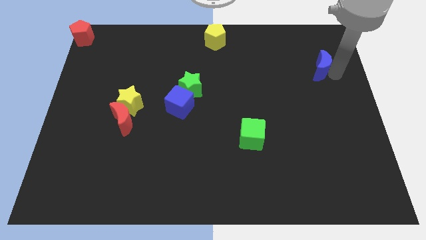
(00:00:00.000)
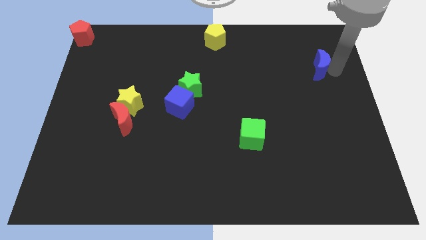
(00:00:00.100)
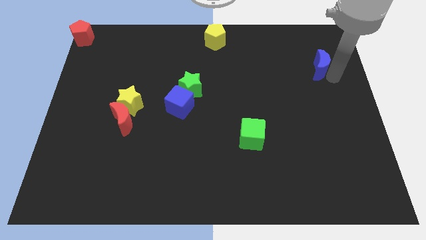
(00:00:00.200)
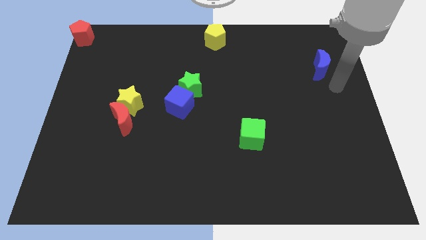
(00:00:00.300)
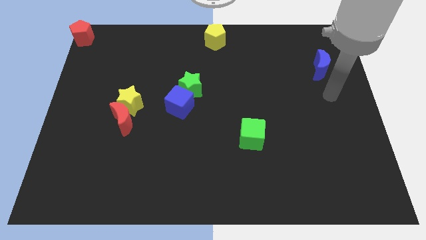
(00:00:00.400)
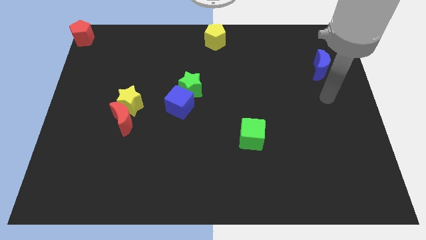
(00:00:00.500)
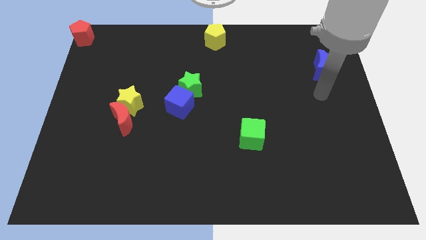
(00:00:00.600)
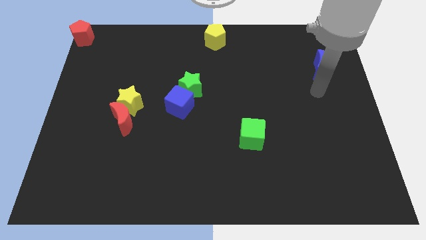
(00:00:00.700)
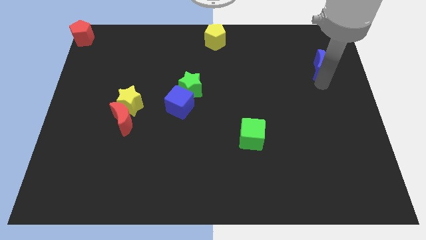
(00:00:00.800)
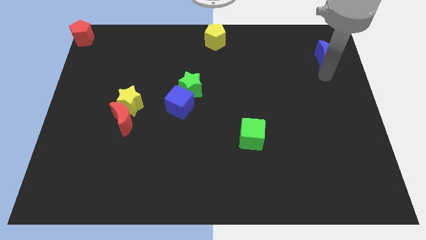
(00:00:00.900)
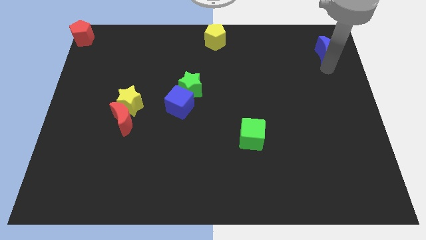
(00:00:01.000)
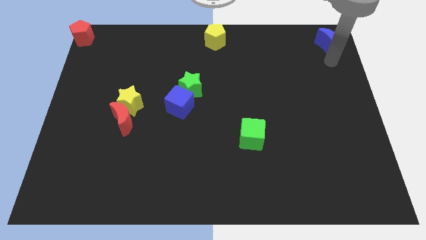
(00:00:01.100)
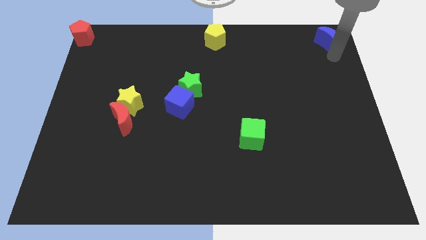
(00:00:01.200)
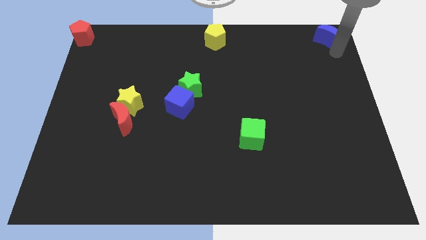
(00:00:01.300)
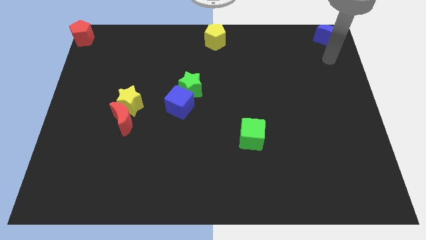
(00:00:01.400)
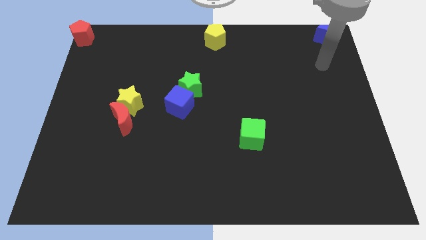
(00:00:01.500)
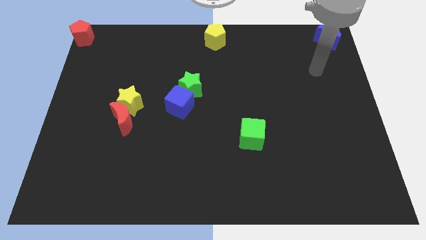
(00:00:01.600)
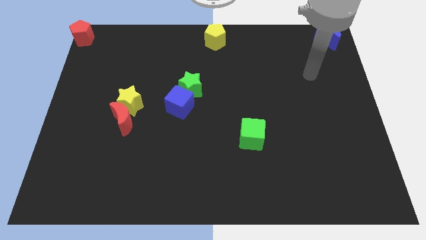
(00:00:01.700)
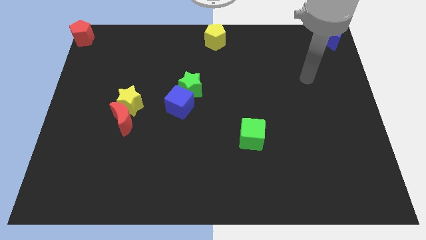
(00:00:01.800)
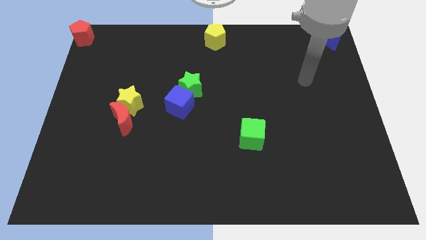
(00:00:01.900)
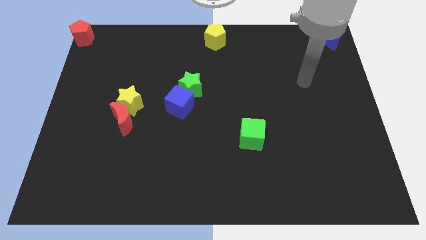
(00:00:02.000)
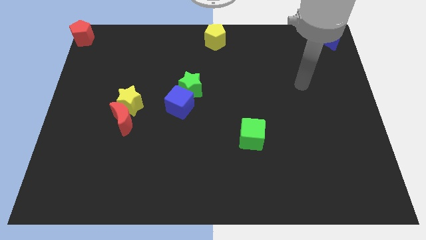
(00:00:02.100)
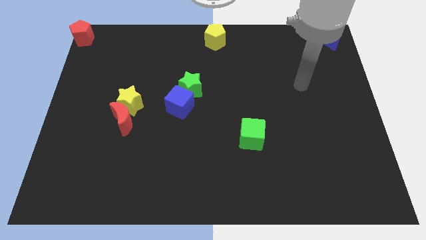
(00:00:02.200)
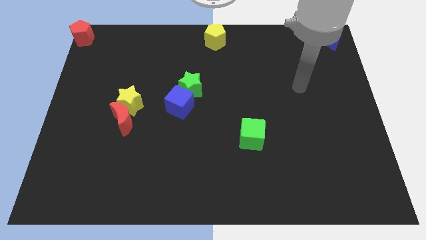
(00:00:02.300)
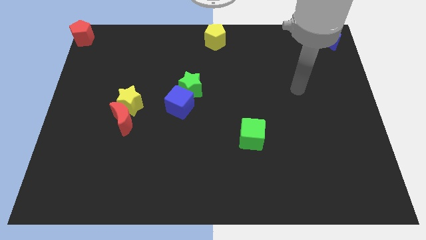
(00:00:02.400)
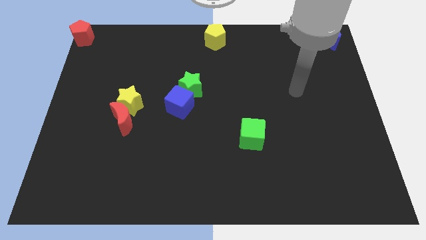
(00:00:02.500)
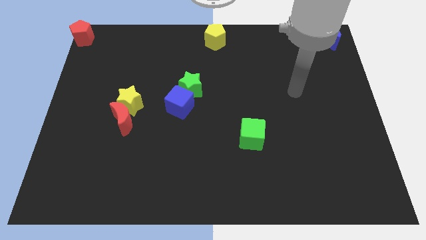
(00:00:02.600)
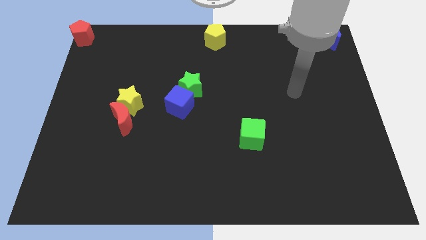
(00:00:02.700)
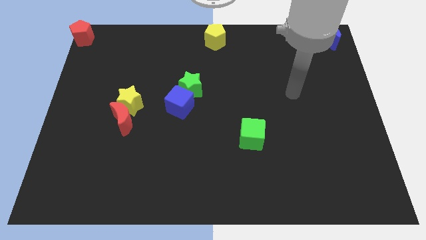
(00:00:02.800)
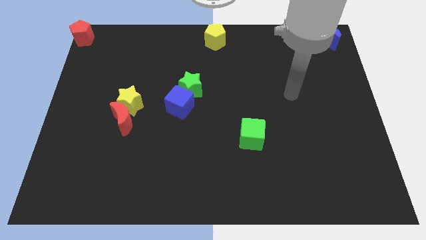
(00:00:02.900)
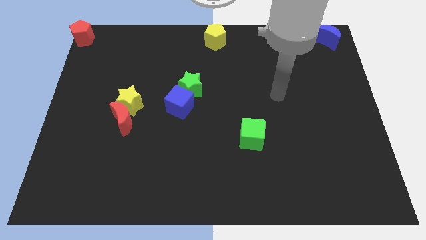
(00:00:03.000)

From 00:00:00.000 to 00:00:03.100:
move the blue crescent to the top right corner

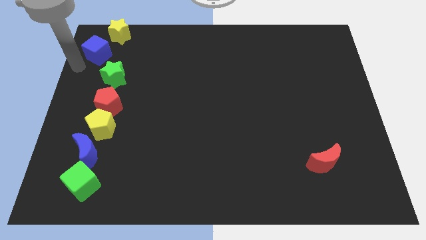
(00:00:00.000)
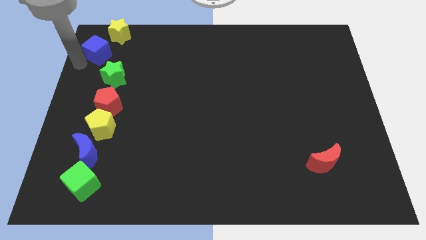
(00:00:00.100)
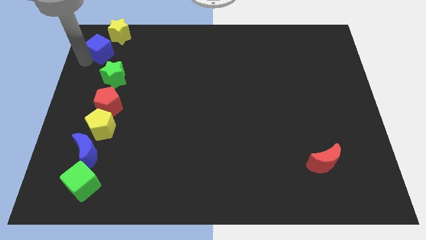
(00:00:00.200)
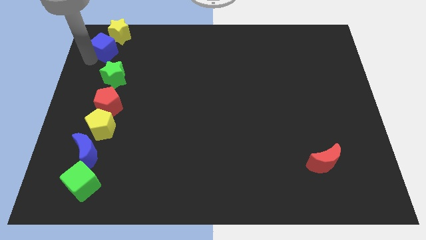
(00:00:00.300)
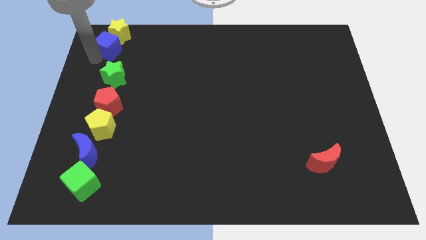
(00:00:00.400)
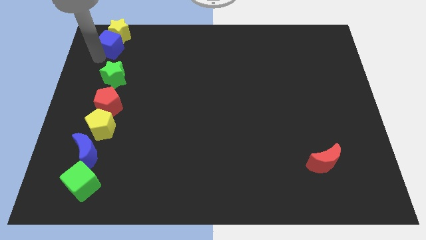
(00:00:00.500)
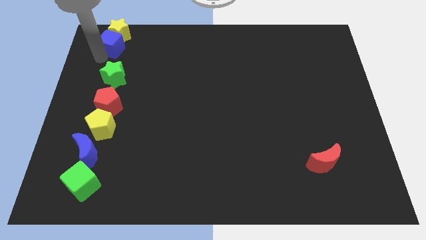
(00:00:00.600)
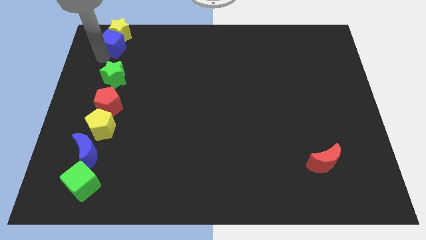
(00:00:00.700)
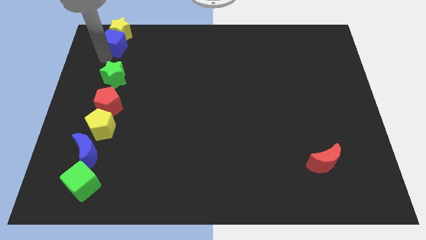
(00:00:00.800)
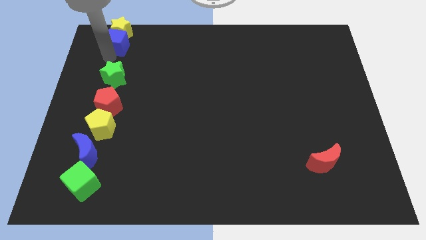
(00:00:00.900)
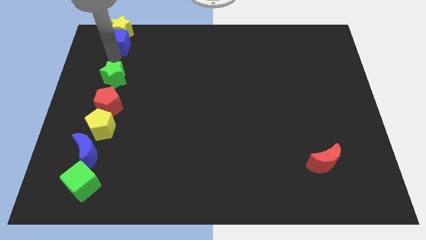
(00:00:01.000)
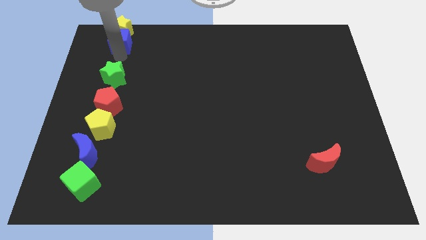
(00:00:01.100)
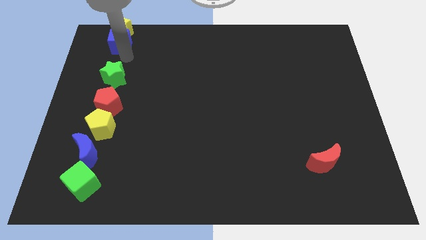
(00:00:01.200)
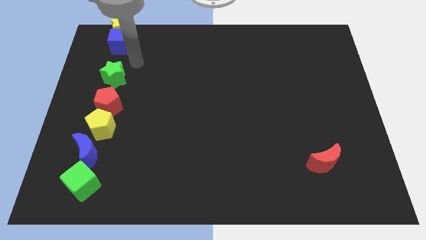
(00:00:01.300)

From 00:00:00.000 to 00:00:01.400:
adjust the blue cube vertically in between the yellow star and green star

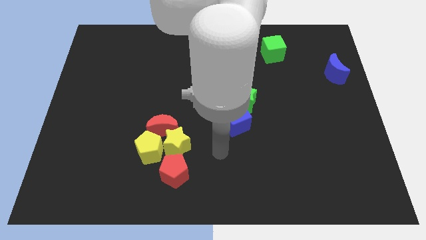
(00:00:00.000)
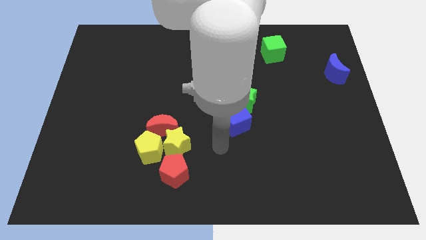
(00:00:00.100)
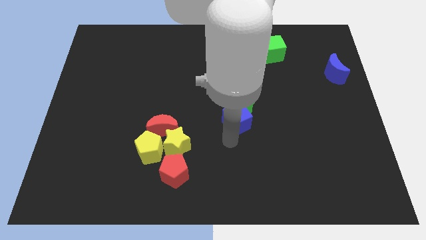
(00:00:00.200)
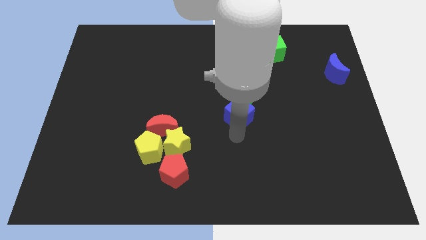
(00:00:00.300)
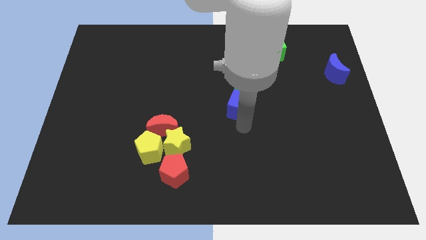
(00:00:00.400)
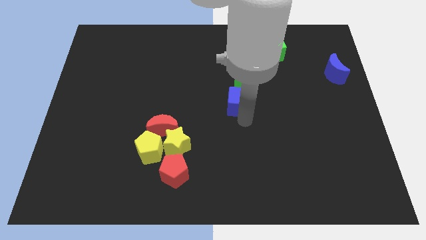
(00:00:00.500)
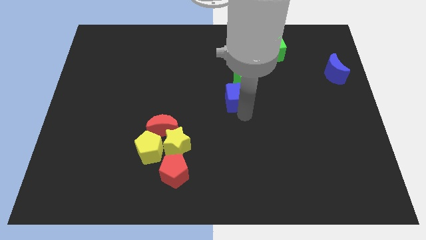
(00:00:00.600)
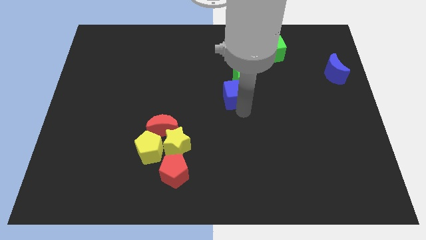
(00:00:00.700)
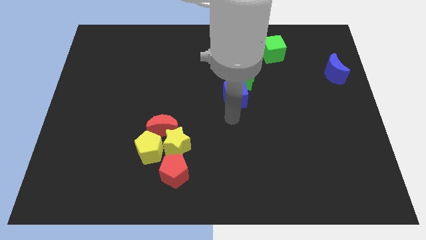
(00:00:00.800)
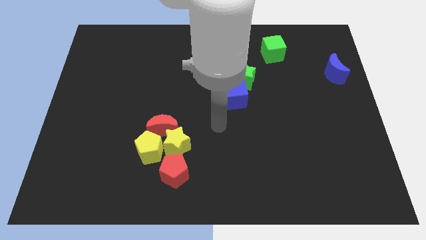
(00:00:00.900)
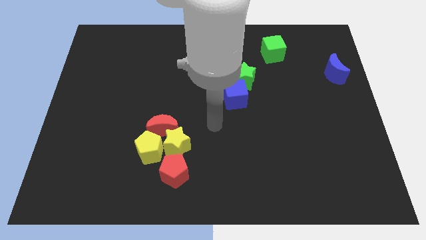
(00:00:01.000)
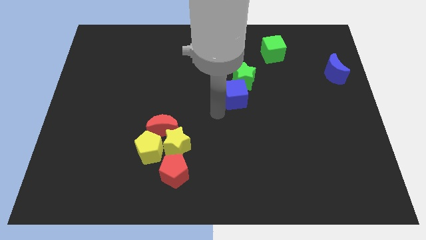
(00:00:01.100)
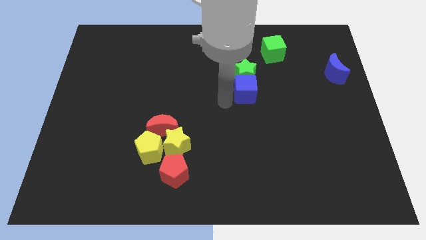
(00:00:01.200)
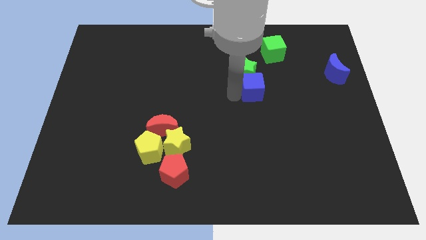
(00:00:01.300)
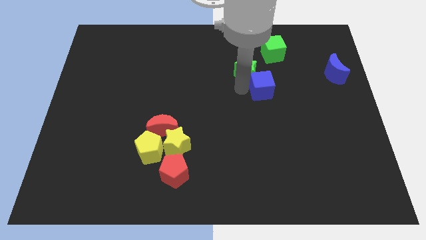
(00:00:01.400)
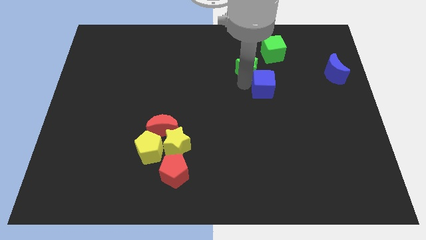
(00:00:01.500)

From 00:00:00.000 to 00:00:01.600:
push green star blue cube upwards

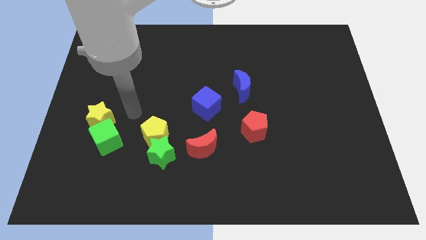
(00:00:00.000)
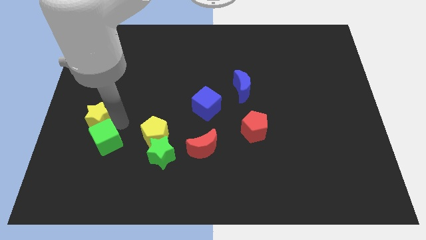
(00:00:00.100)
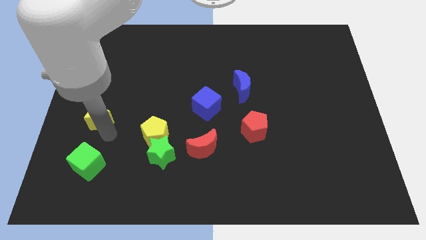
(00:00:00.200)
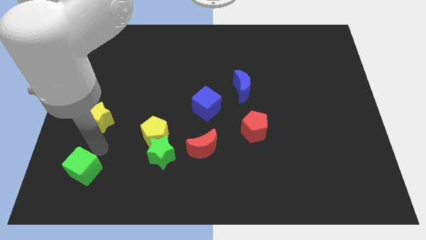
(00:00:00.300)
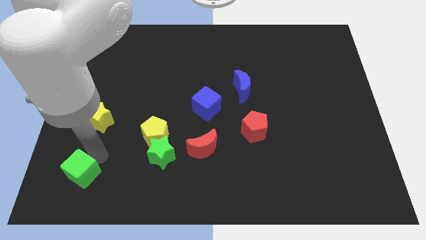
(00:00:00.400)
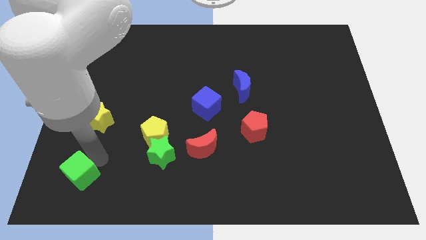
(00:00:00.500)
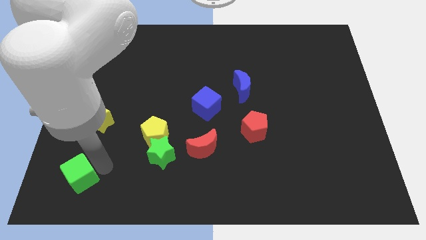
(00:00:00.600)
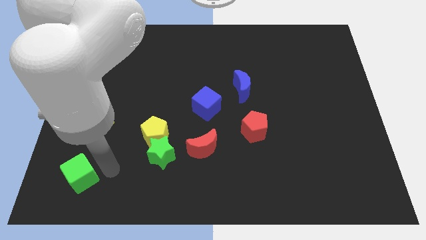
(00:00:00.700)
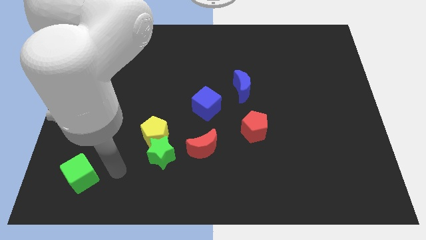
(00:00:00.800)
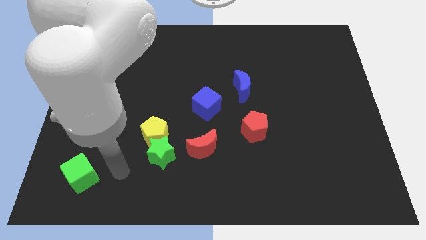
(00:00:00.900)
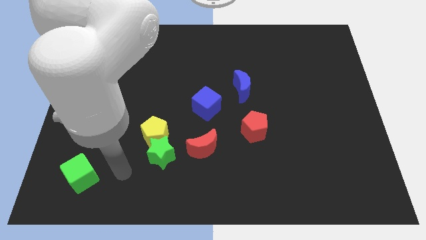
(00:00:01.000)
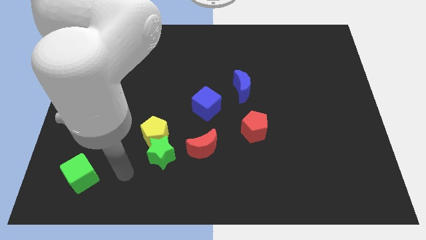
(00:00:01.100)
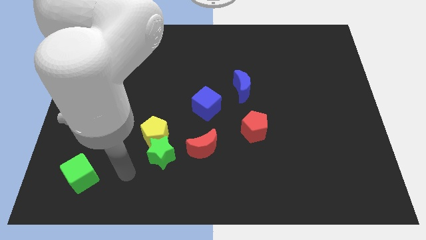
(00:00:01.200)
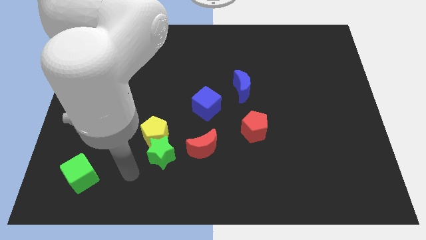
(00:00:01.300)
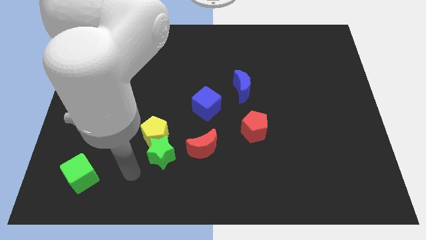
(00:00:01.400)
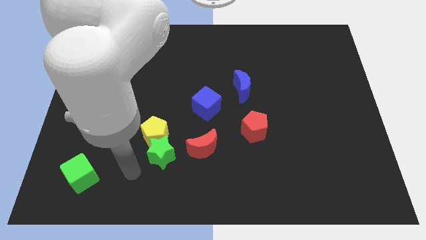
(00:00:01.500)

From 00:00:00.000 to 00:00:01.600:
separate the green cube from the yellow star

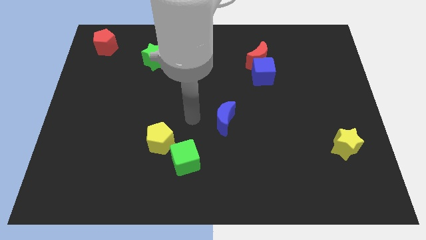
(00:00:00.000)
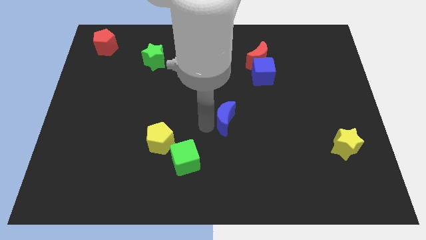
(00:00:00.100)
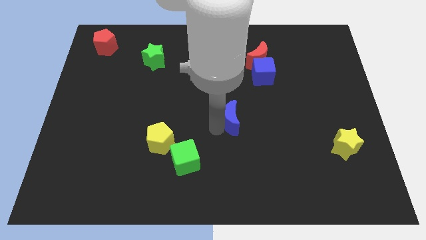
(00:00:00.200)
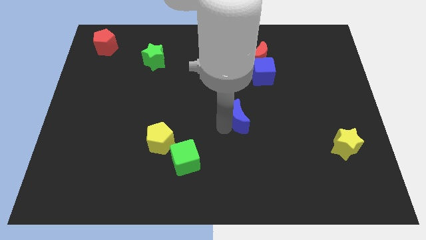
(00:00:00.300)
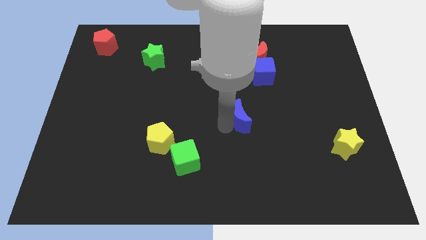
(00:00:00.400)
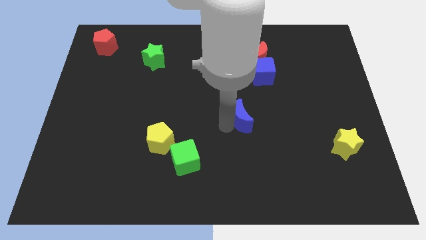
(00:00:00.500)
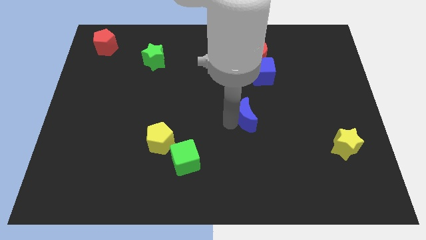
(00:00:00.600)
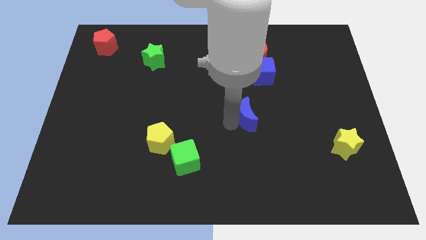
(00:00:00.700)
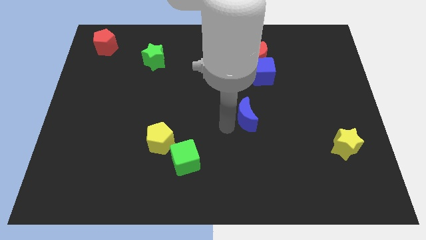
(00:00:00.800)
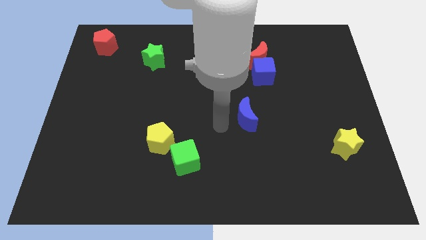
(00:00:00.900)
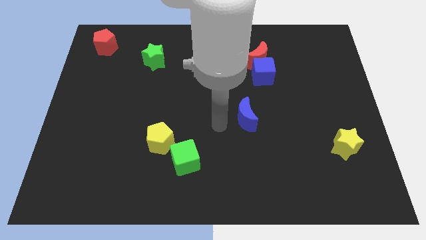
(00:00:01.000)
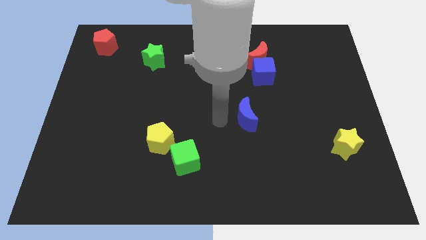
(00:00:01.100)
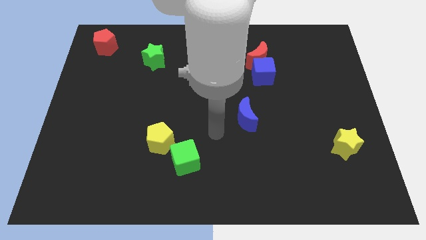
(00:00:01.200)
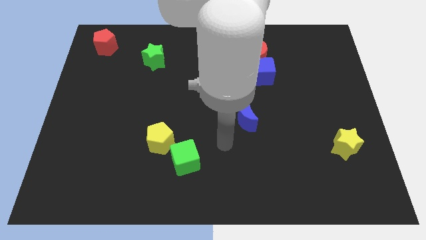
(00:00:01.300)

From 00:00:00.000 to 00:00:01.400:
slide the blue crescent slightly to the right
